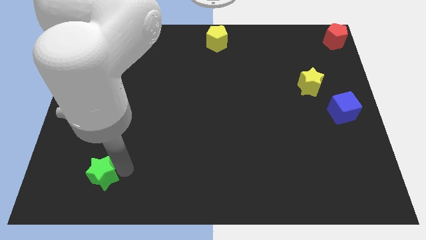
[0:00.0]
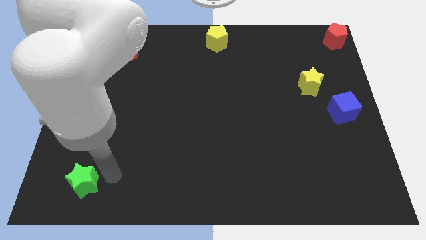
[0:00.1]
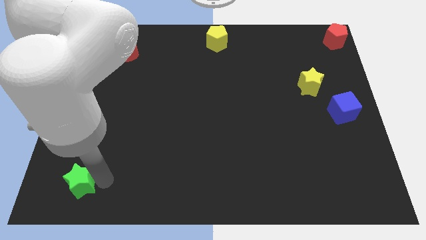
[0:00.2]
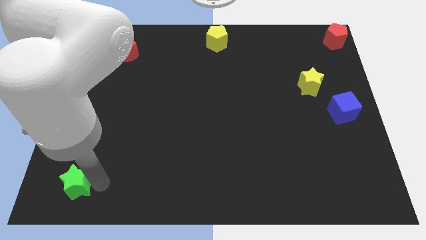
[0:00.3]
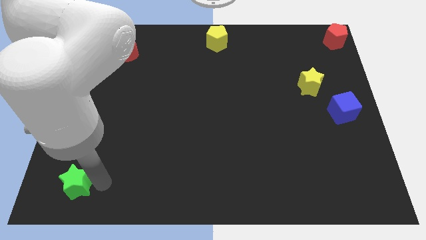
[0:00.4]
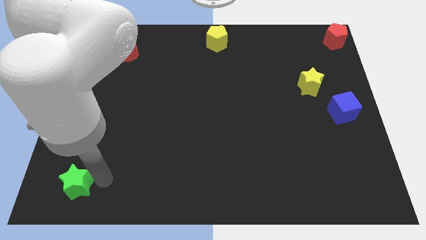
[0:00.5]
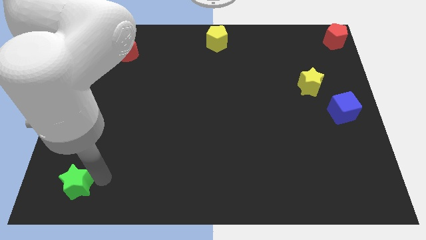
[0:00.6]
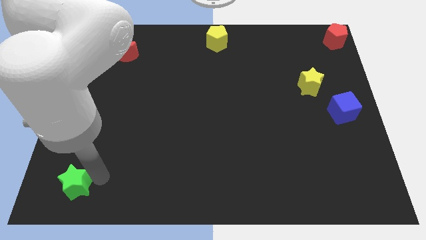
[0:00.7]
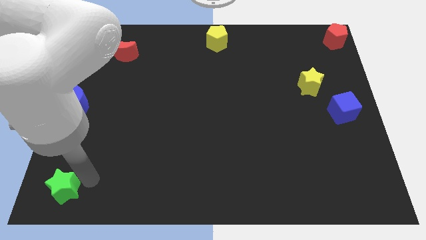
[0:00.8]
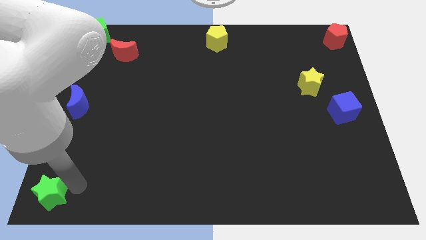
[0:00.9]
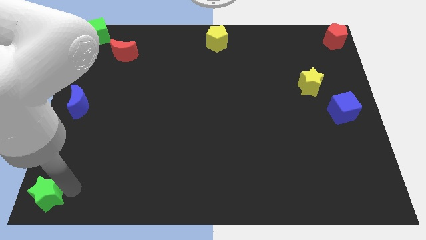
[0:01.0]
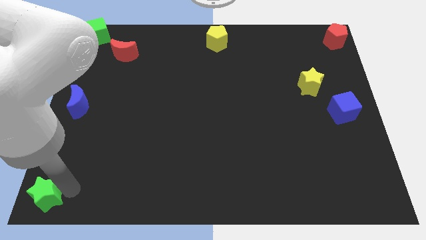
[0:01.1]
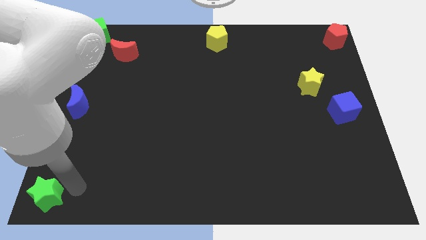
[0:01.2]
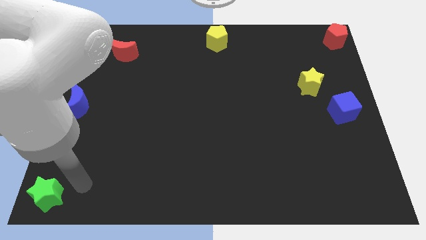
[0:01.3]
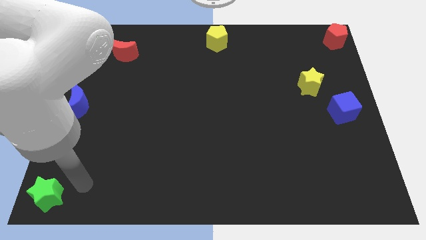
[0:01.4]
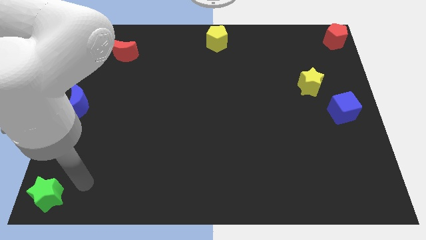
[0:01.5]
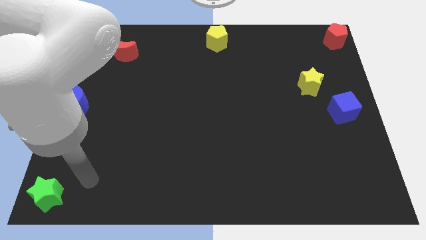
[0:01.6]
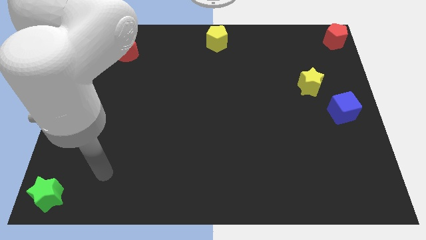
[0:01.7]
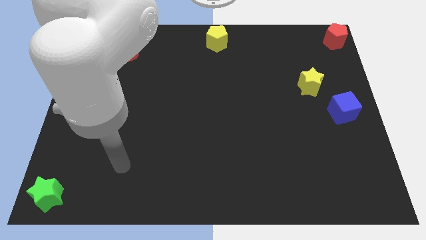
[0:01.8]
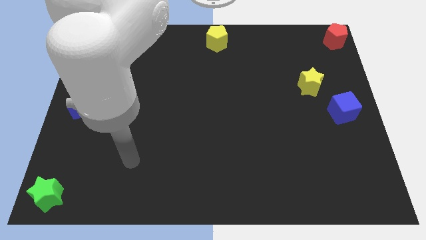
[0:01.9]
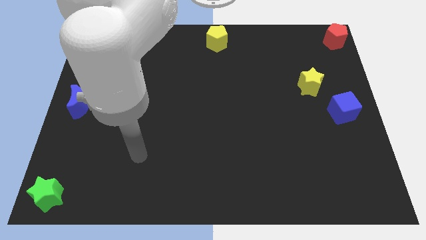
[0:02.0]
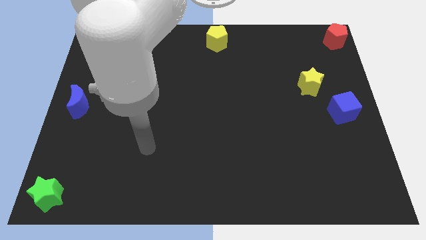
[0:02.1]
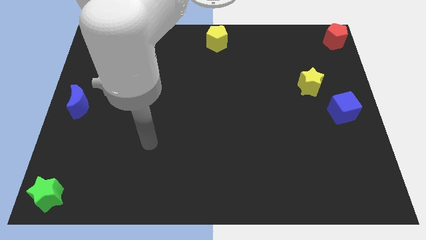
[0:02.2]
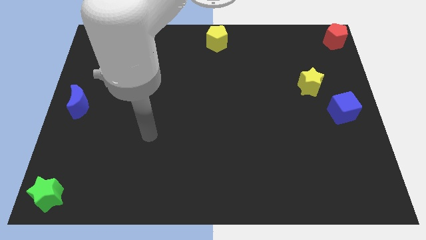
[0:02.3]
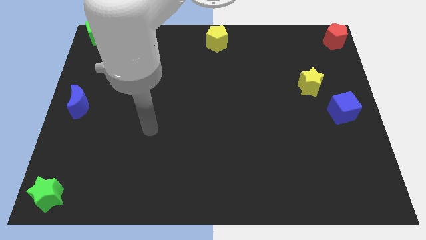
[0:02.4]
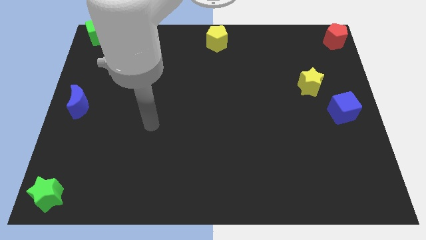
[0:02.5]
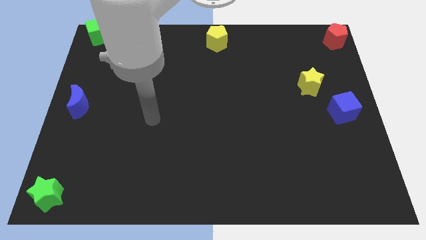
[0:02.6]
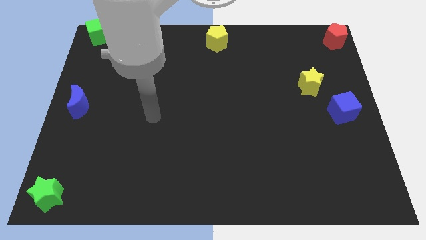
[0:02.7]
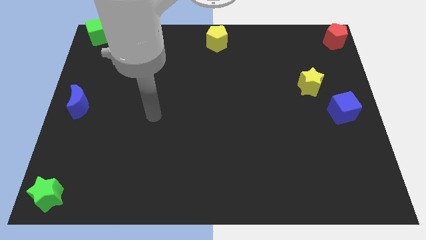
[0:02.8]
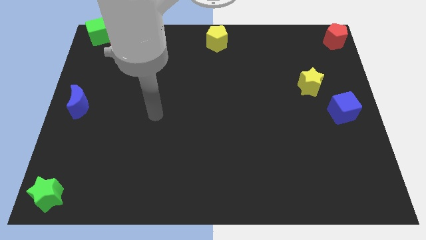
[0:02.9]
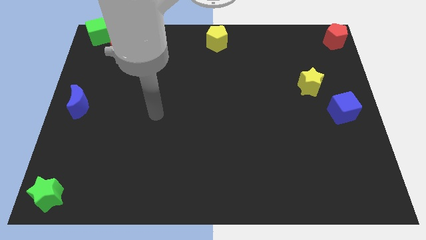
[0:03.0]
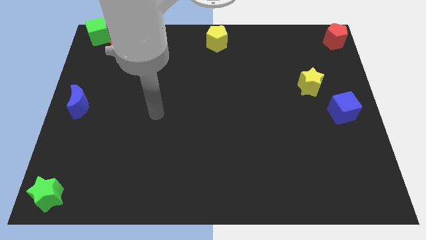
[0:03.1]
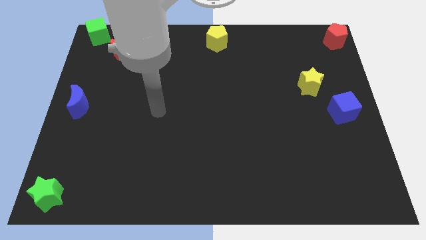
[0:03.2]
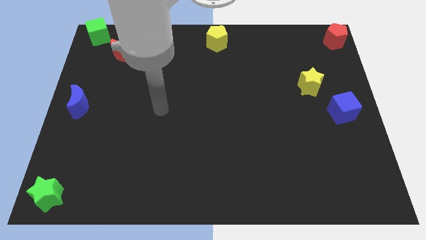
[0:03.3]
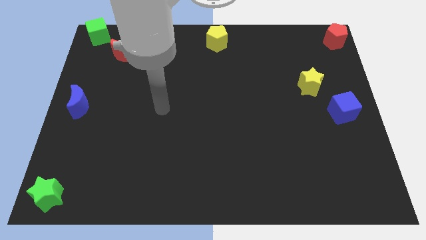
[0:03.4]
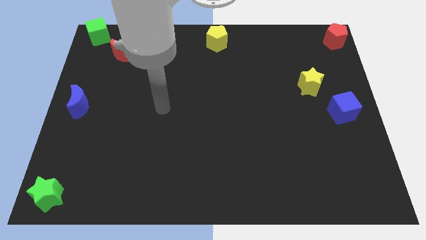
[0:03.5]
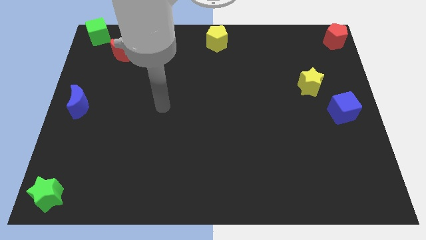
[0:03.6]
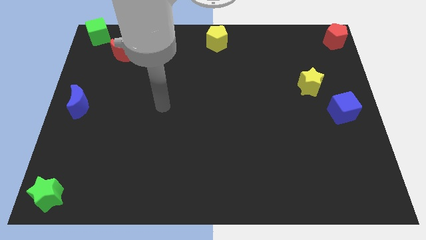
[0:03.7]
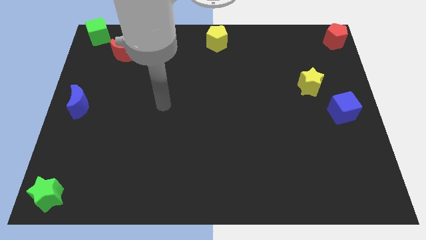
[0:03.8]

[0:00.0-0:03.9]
place the green star bottom left corner of the board

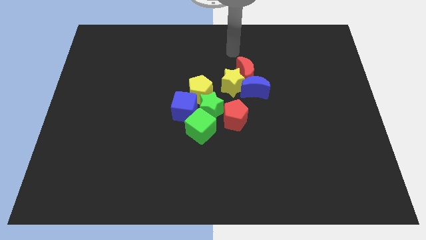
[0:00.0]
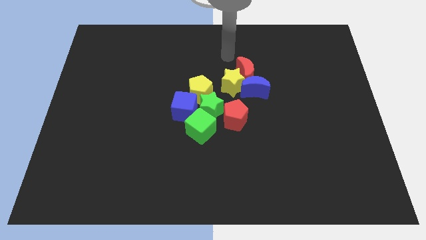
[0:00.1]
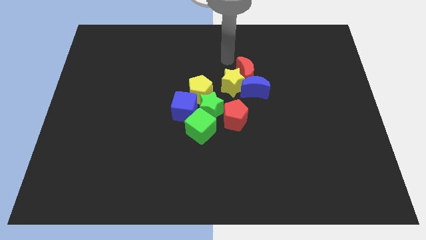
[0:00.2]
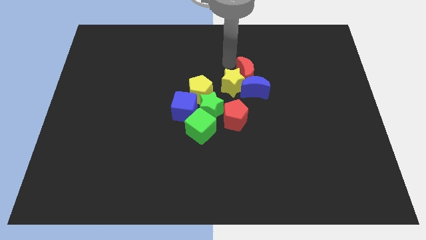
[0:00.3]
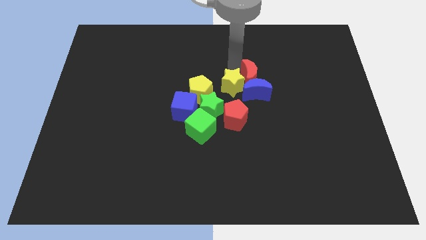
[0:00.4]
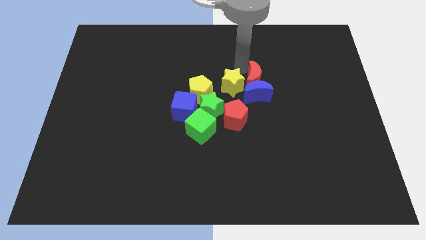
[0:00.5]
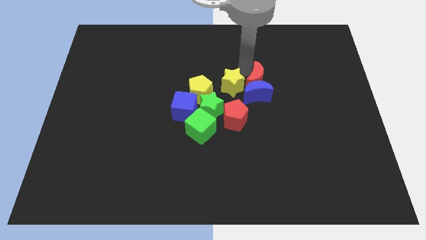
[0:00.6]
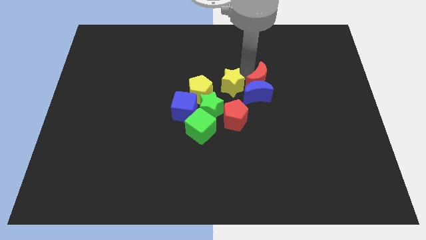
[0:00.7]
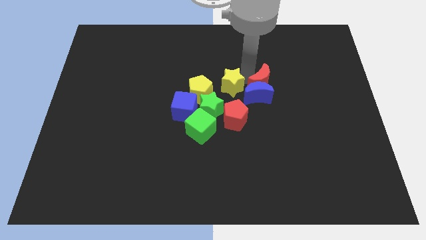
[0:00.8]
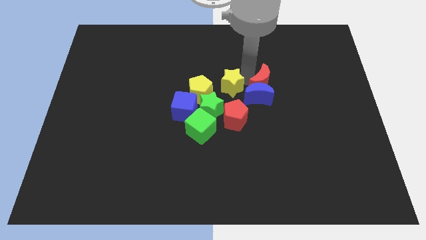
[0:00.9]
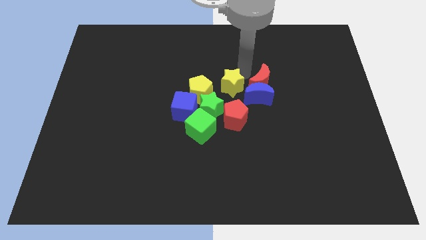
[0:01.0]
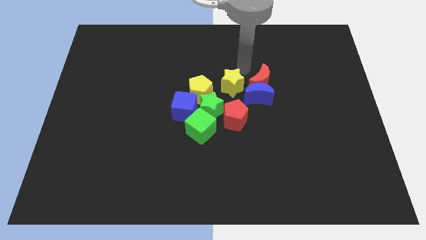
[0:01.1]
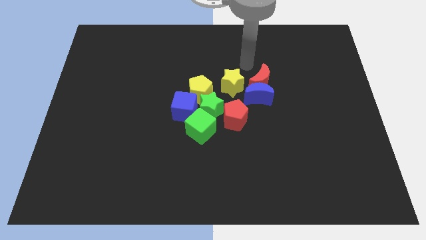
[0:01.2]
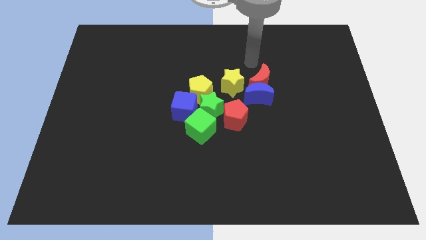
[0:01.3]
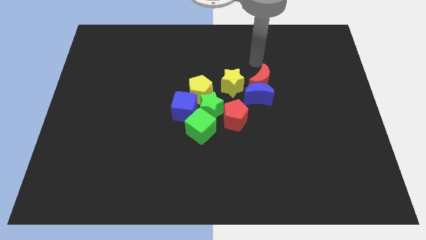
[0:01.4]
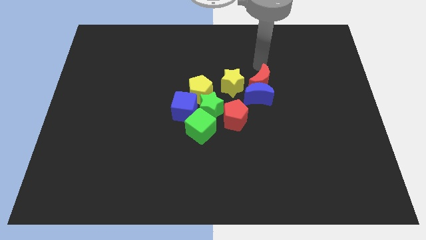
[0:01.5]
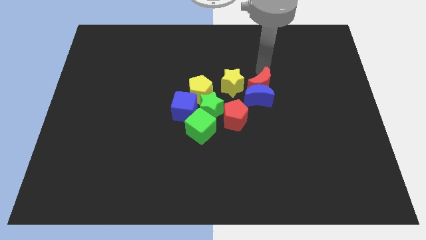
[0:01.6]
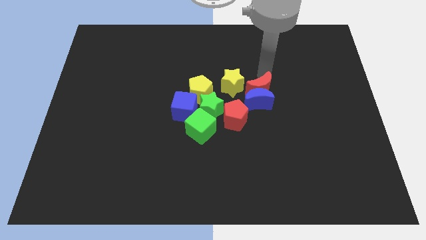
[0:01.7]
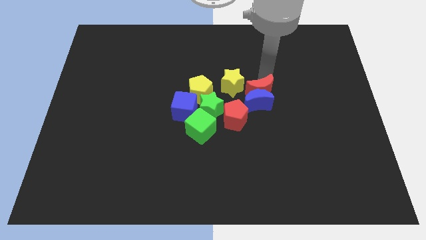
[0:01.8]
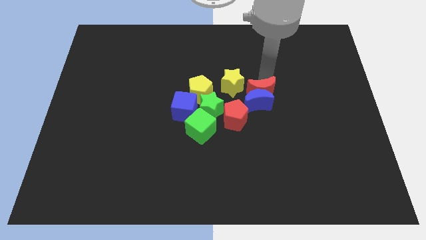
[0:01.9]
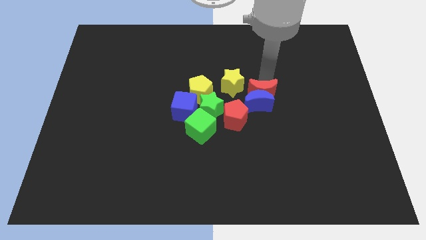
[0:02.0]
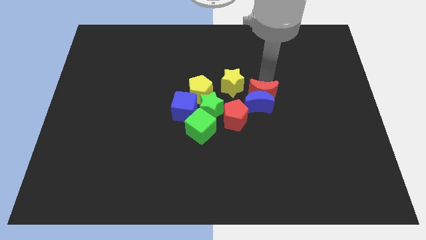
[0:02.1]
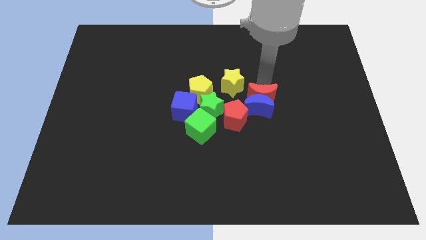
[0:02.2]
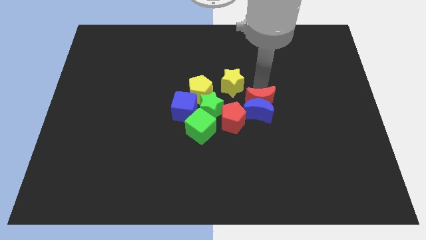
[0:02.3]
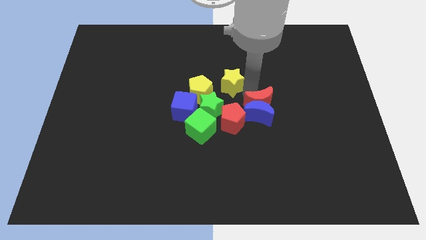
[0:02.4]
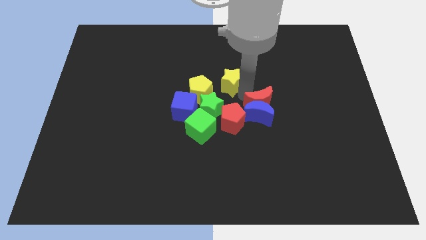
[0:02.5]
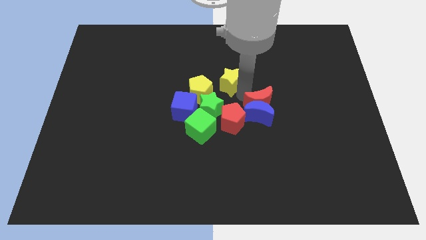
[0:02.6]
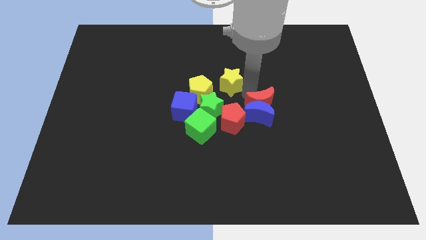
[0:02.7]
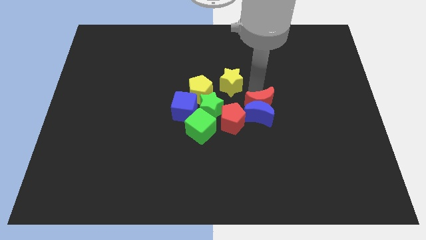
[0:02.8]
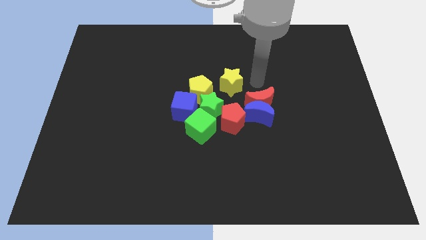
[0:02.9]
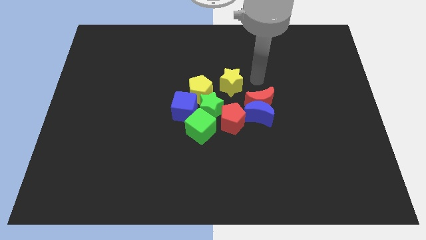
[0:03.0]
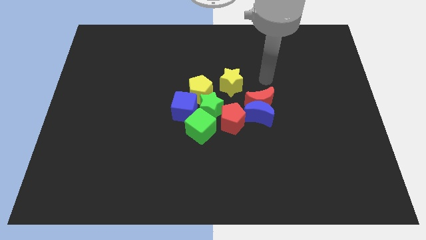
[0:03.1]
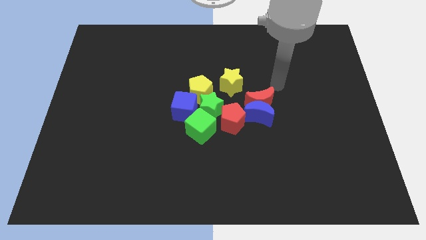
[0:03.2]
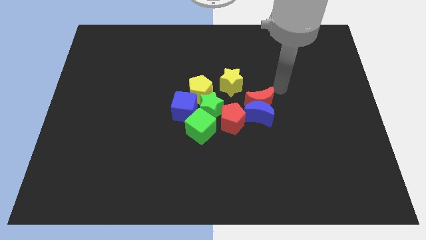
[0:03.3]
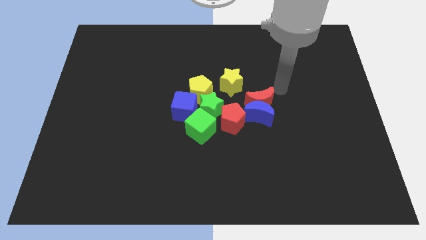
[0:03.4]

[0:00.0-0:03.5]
push the red crescent along with blue crescent towards bottom

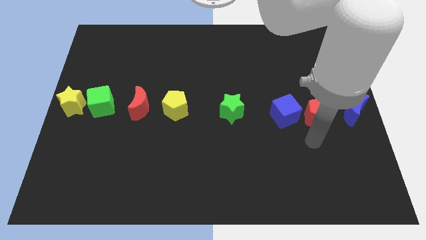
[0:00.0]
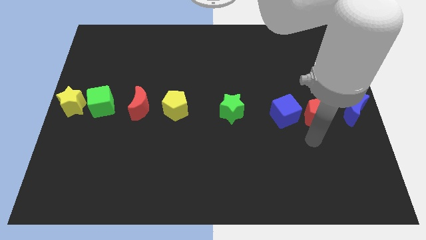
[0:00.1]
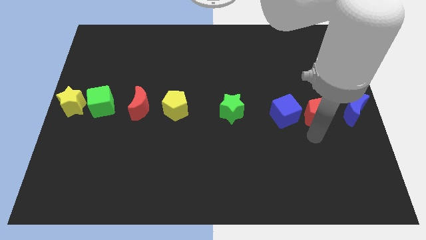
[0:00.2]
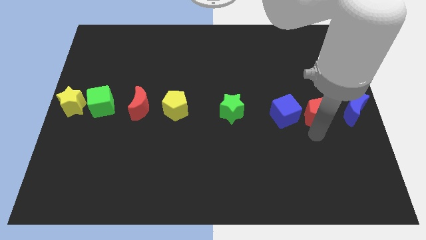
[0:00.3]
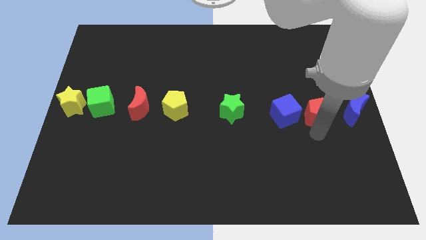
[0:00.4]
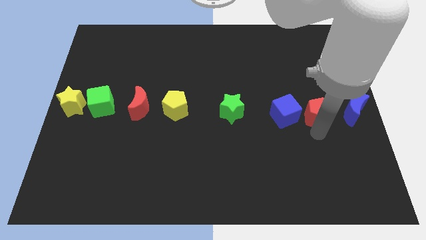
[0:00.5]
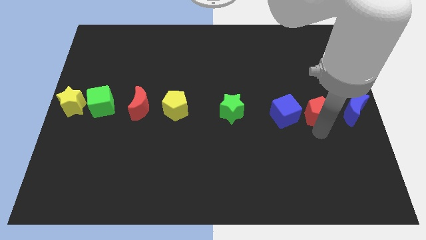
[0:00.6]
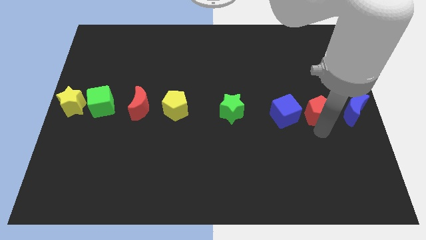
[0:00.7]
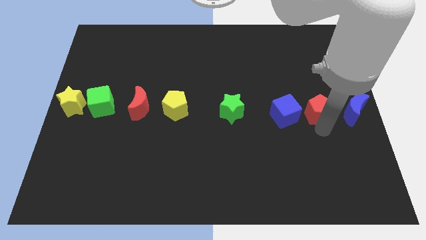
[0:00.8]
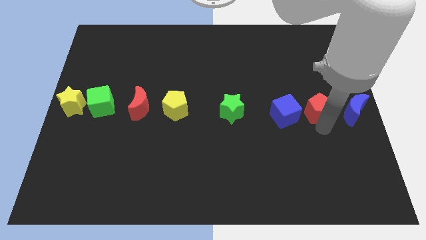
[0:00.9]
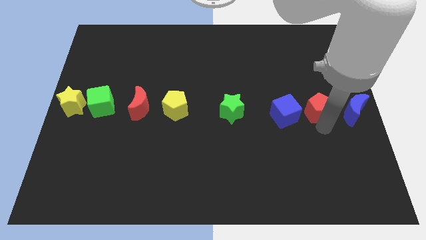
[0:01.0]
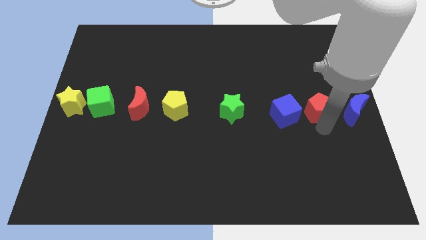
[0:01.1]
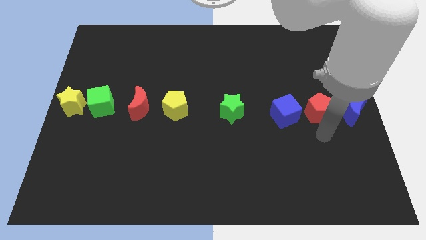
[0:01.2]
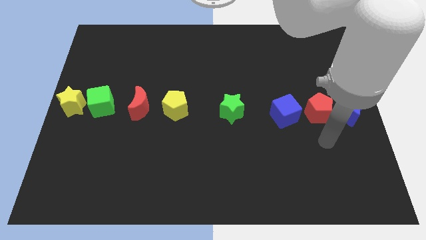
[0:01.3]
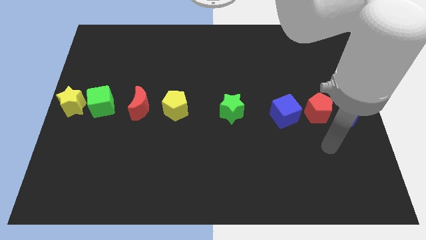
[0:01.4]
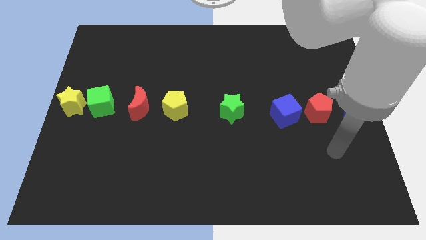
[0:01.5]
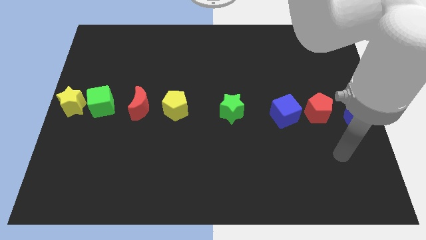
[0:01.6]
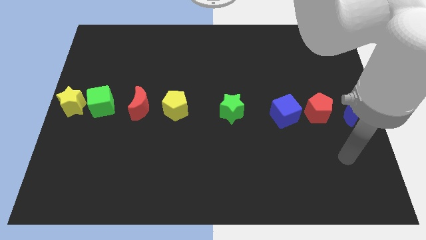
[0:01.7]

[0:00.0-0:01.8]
move your arm away from the red pentagon
